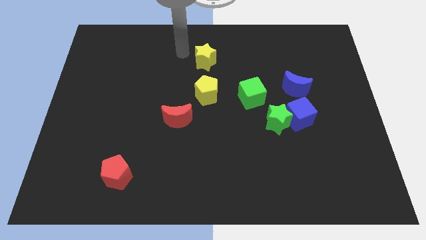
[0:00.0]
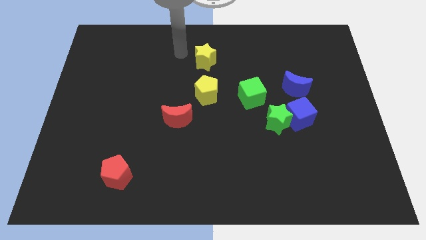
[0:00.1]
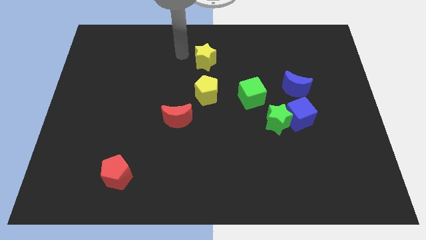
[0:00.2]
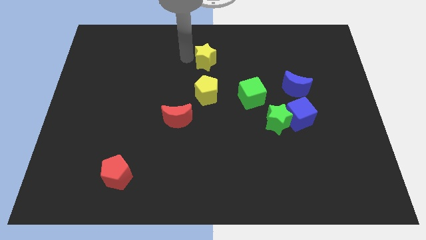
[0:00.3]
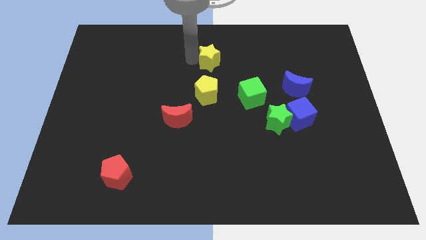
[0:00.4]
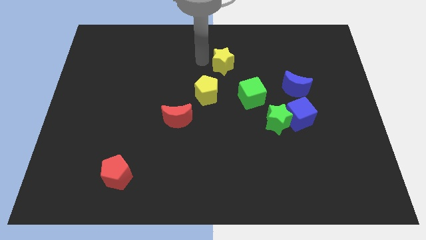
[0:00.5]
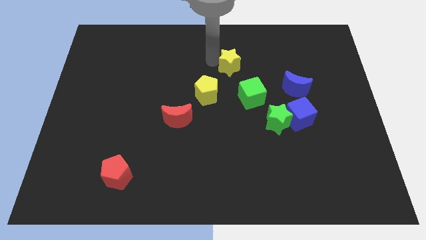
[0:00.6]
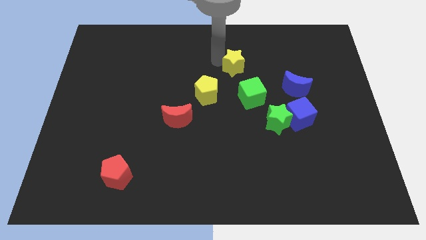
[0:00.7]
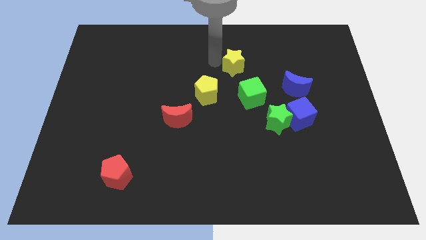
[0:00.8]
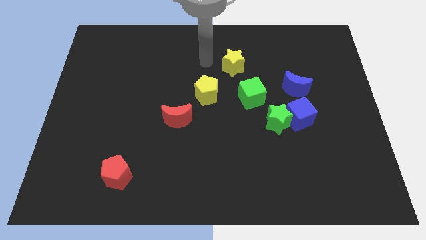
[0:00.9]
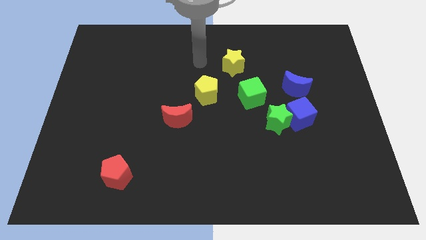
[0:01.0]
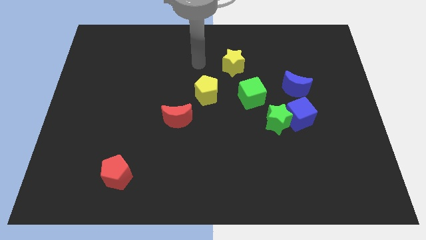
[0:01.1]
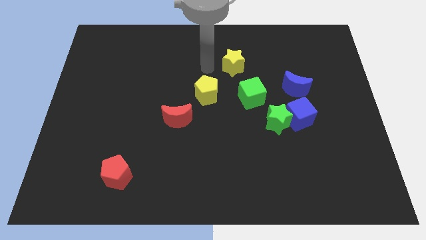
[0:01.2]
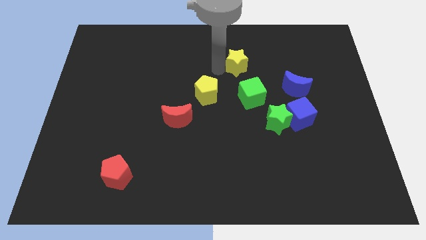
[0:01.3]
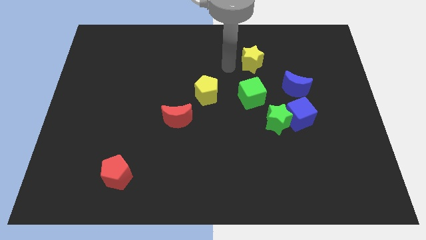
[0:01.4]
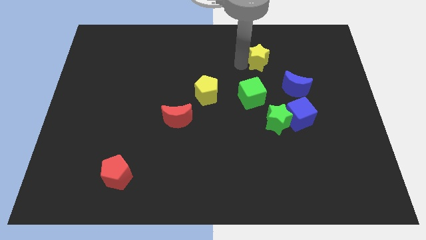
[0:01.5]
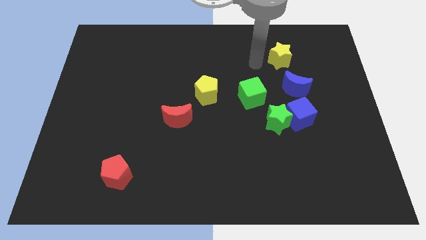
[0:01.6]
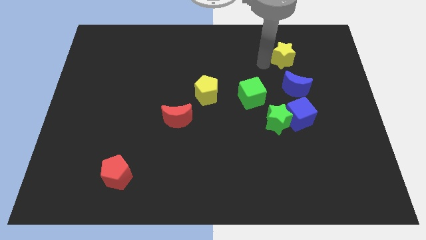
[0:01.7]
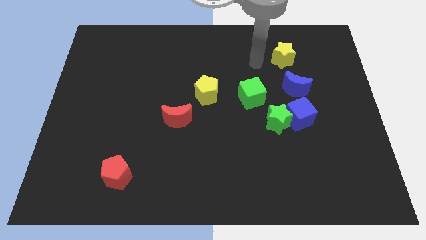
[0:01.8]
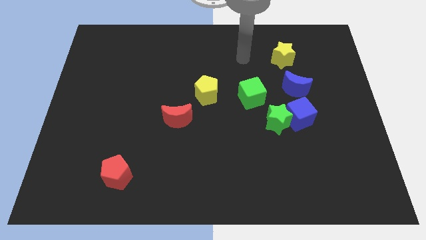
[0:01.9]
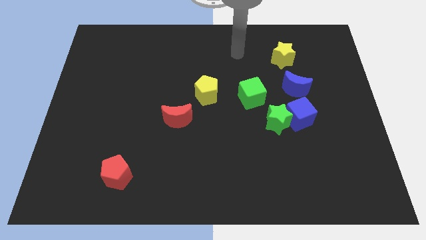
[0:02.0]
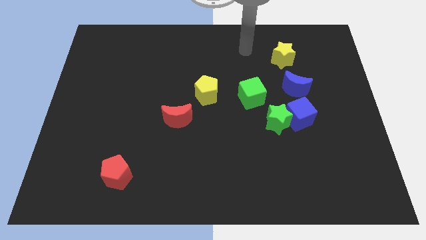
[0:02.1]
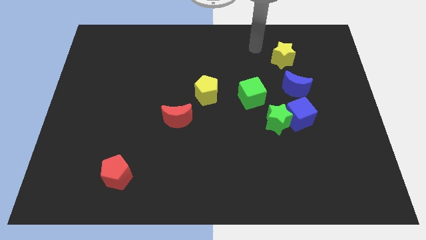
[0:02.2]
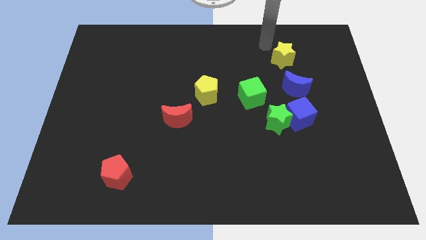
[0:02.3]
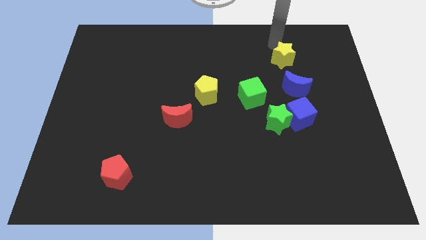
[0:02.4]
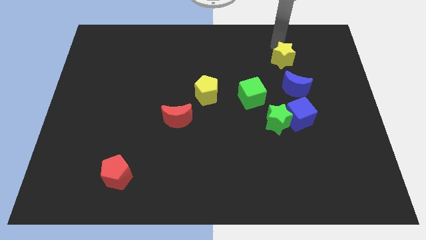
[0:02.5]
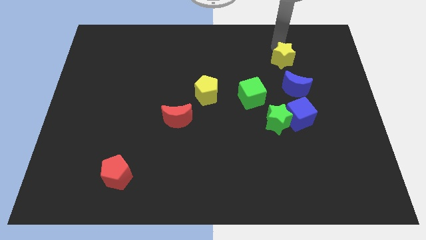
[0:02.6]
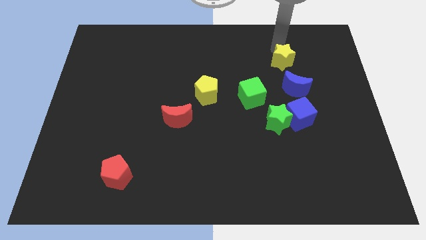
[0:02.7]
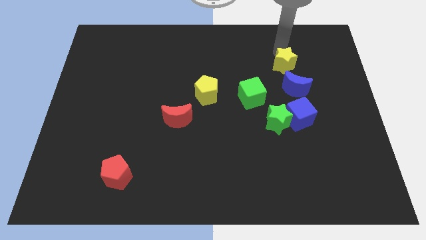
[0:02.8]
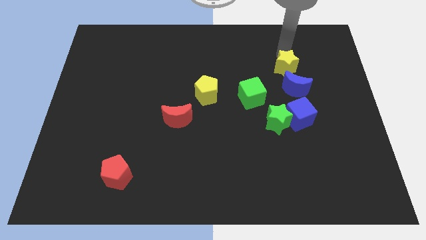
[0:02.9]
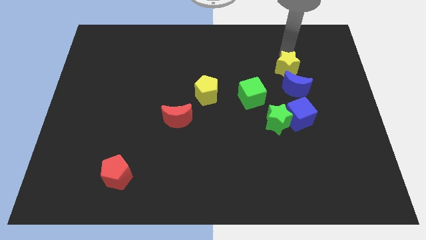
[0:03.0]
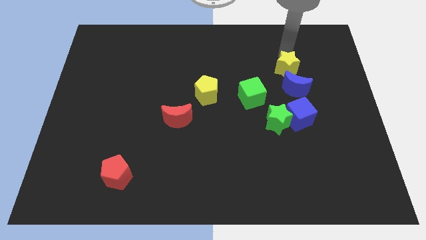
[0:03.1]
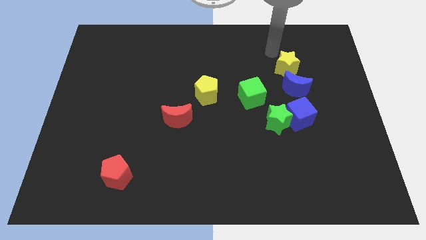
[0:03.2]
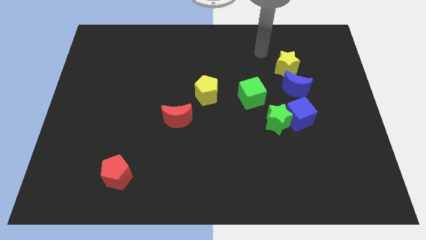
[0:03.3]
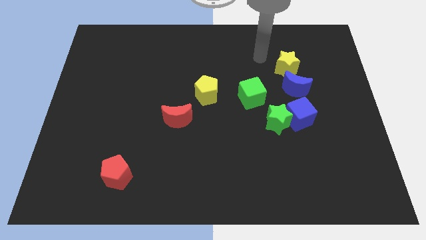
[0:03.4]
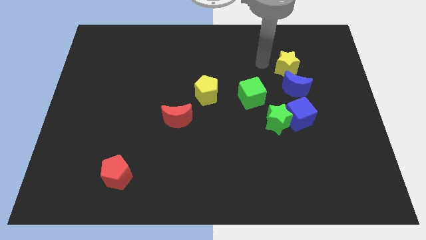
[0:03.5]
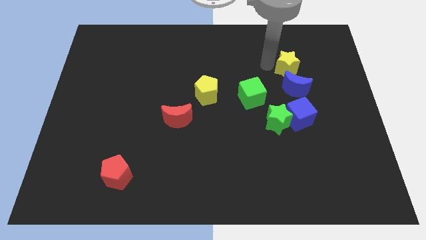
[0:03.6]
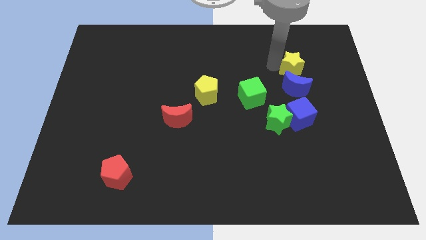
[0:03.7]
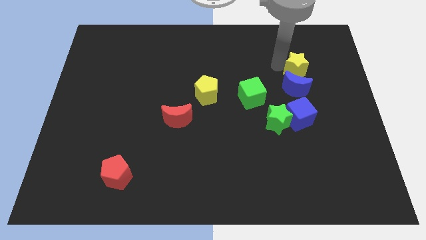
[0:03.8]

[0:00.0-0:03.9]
push the yellow star above the blue moon

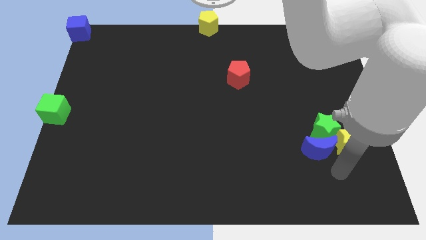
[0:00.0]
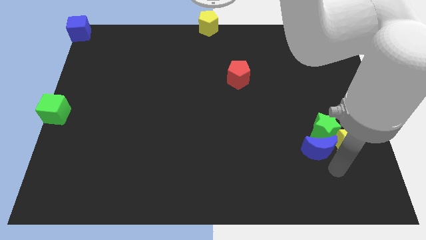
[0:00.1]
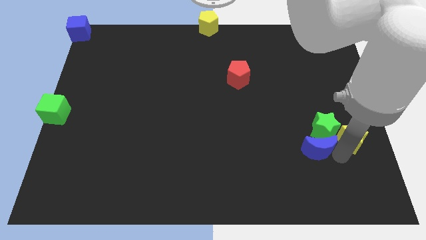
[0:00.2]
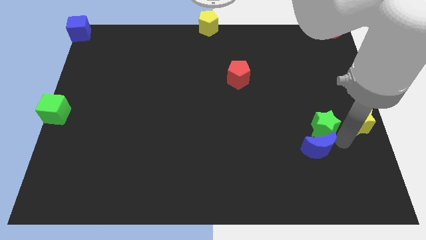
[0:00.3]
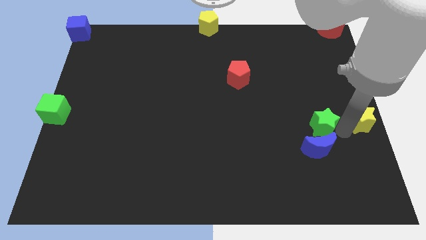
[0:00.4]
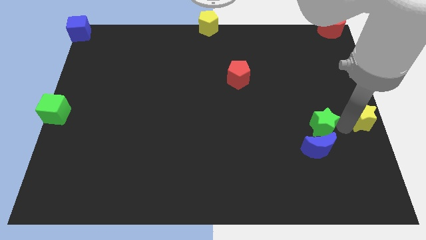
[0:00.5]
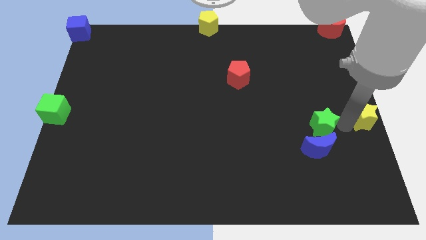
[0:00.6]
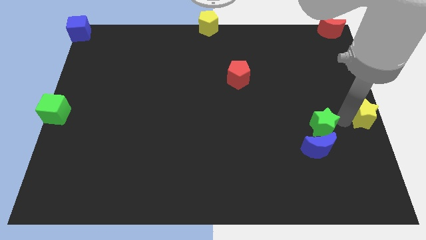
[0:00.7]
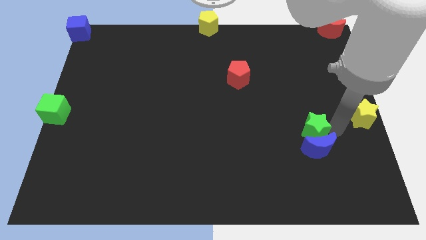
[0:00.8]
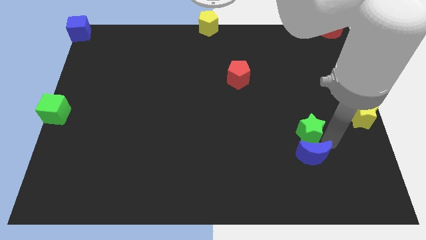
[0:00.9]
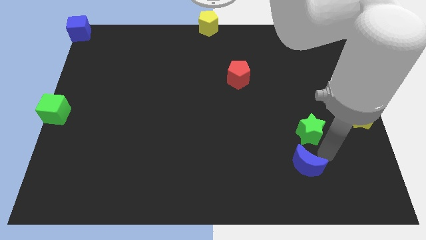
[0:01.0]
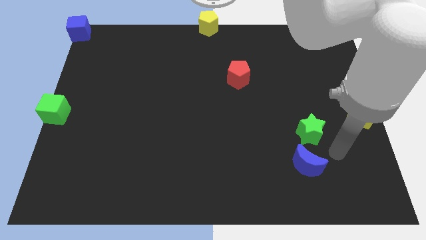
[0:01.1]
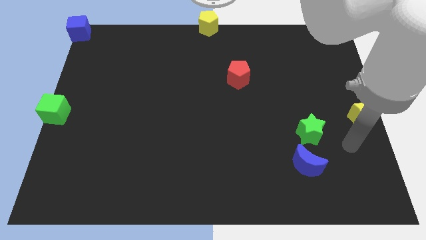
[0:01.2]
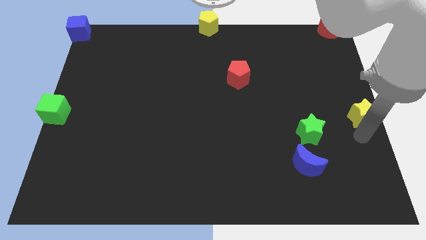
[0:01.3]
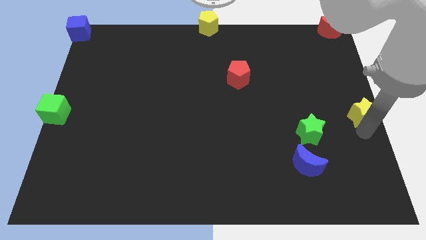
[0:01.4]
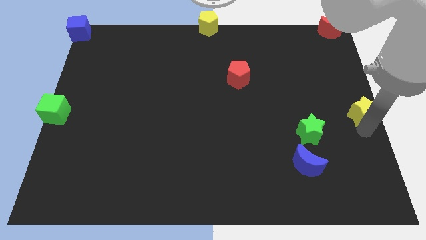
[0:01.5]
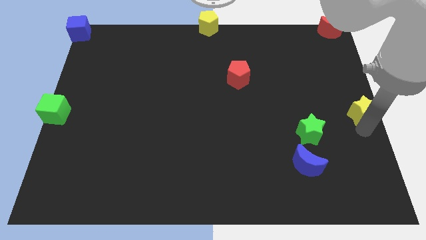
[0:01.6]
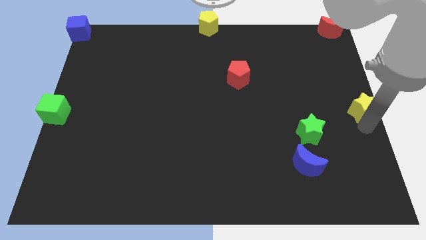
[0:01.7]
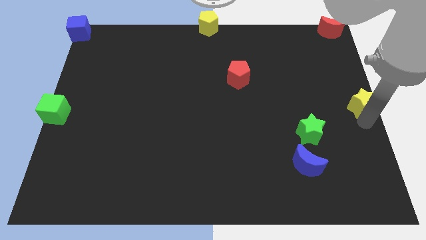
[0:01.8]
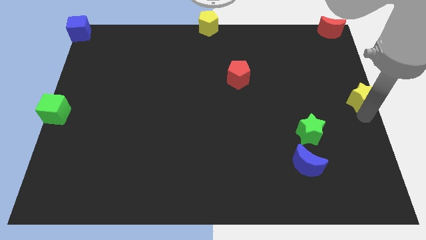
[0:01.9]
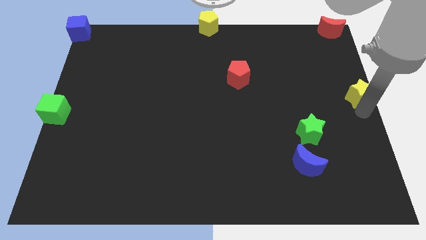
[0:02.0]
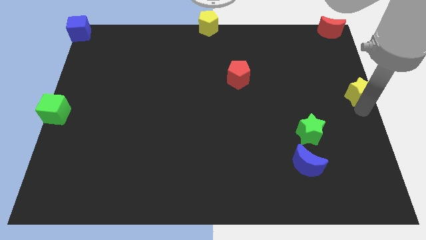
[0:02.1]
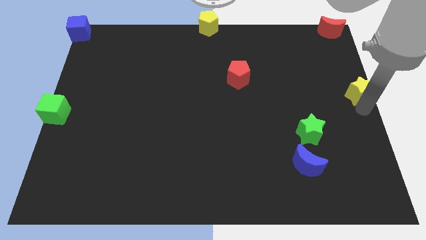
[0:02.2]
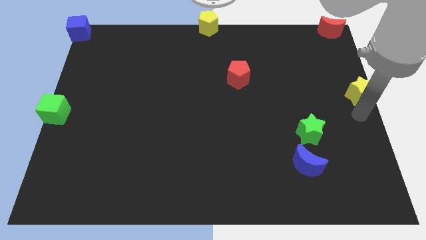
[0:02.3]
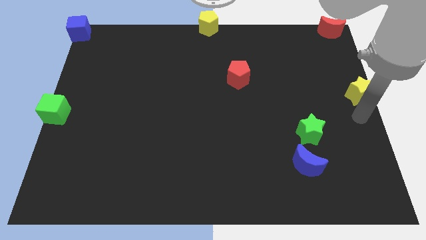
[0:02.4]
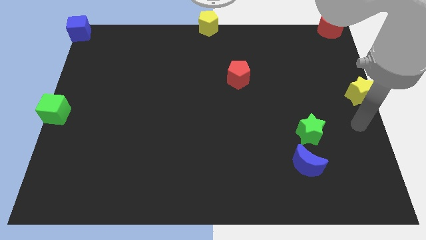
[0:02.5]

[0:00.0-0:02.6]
separate yellow star and green star

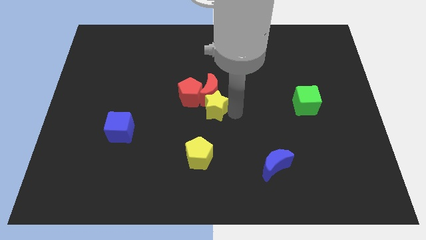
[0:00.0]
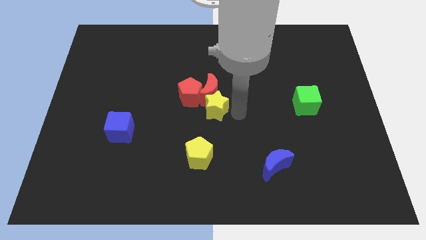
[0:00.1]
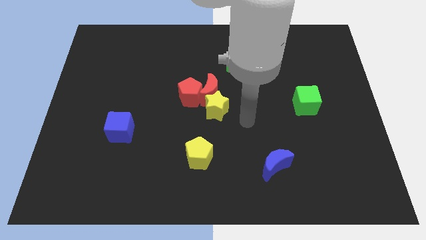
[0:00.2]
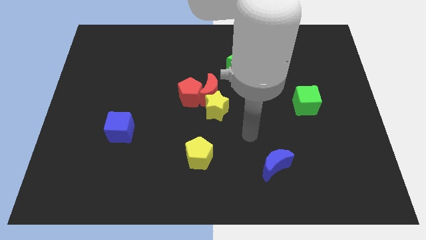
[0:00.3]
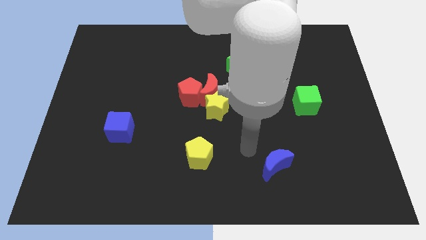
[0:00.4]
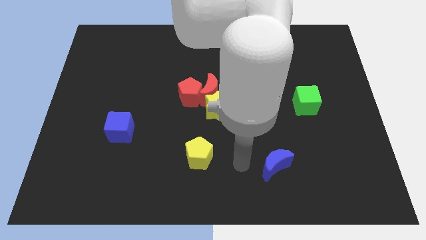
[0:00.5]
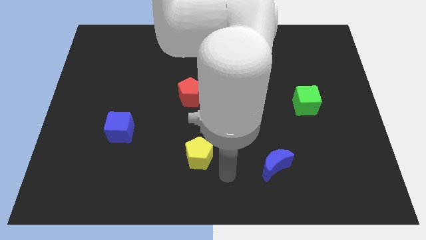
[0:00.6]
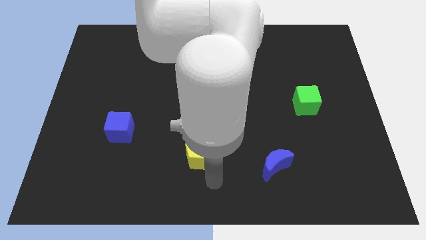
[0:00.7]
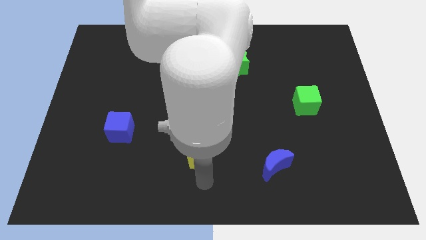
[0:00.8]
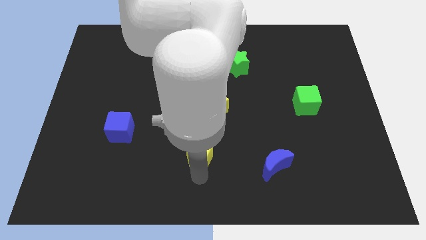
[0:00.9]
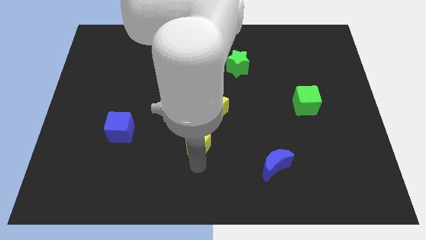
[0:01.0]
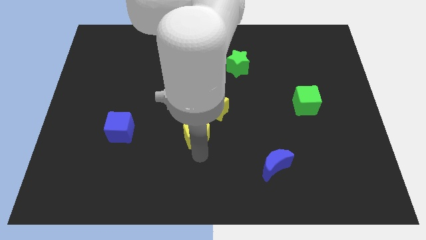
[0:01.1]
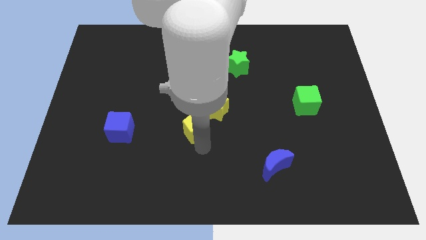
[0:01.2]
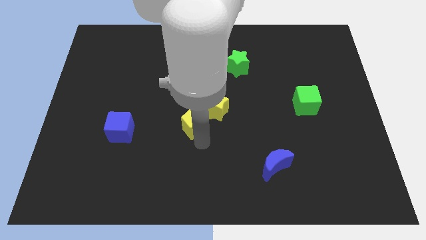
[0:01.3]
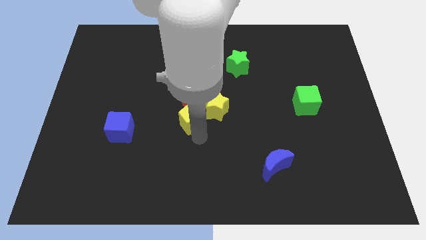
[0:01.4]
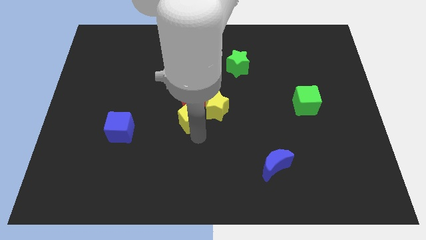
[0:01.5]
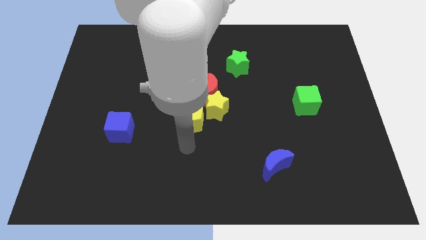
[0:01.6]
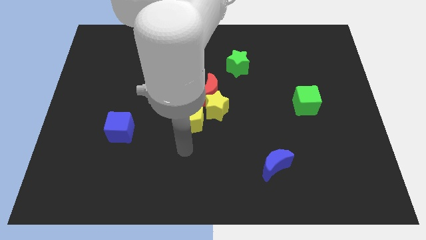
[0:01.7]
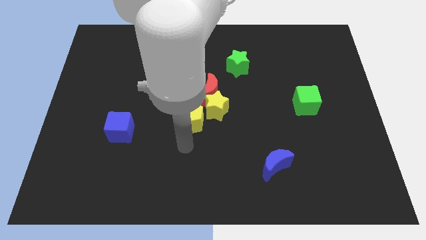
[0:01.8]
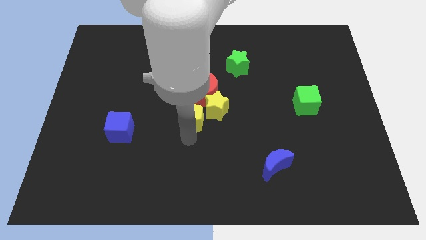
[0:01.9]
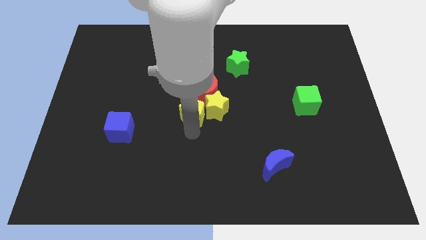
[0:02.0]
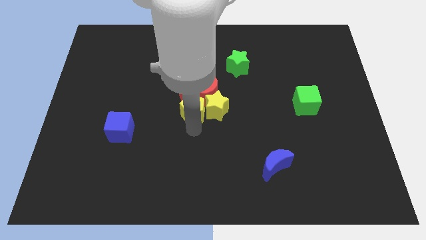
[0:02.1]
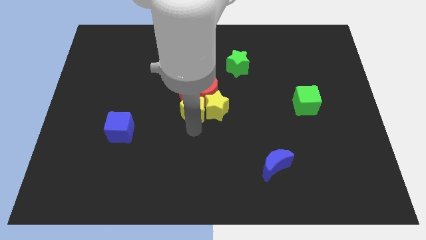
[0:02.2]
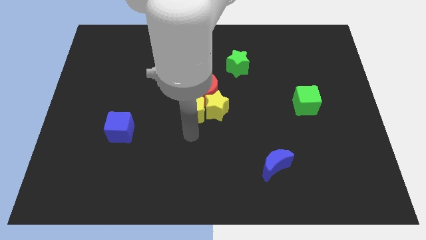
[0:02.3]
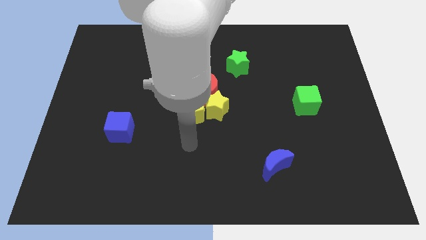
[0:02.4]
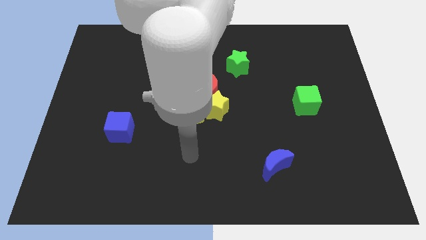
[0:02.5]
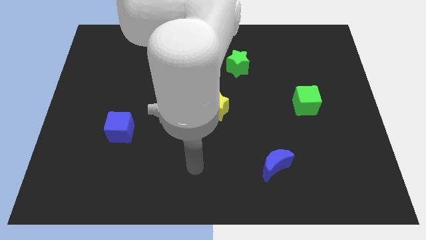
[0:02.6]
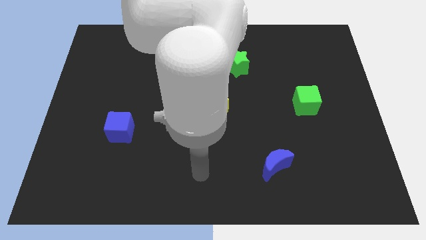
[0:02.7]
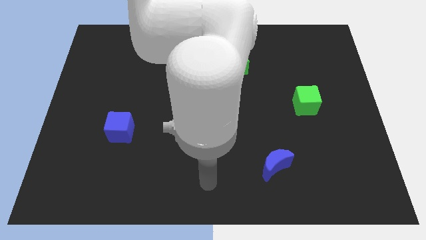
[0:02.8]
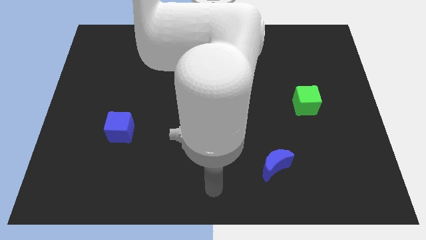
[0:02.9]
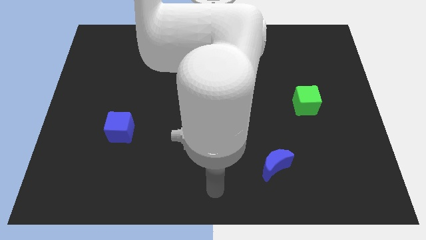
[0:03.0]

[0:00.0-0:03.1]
put the yellow pentagon on the left side of the yellow star
